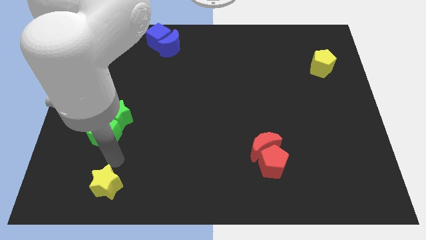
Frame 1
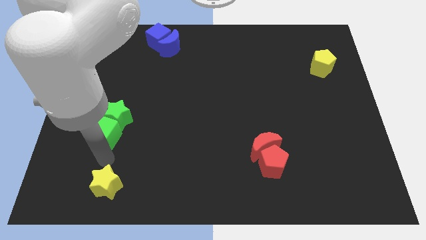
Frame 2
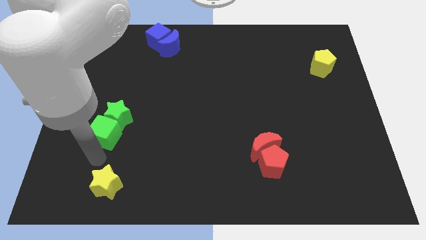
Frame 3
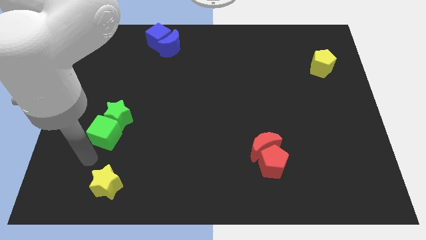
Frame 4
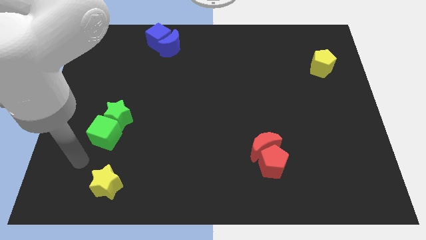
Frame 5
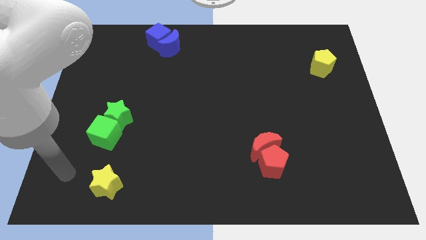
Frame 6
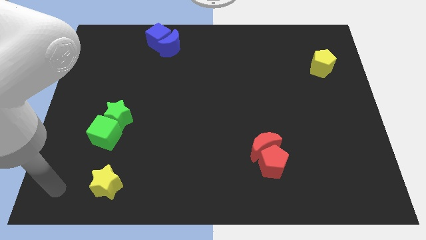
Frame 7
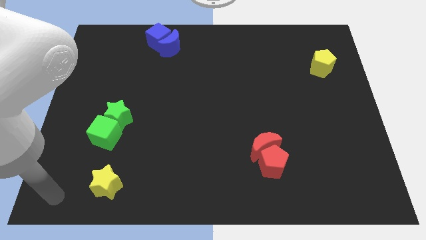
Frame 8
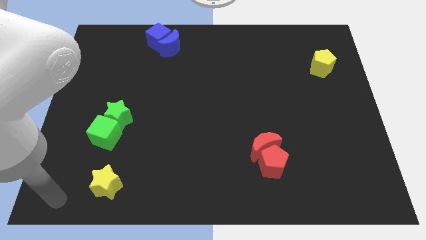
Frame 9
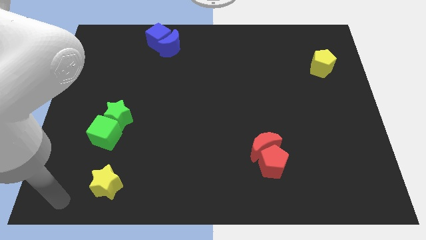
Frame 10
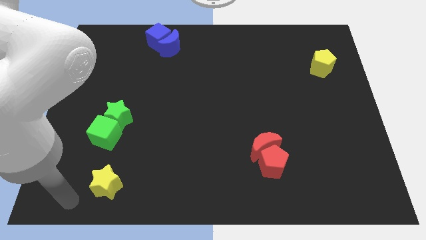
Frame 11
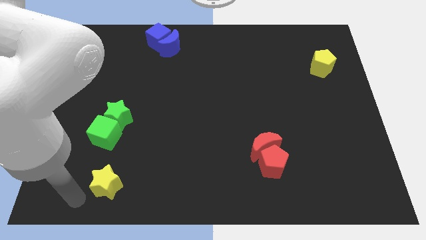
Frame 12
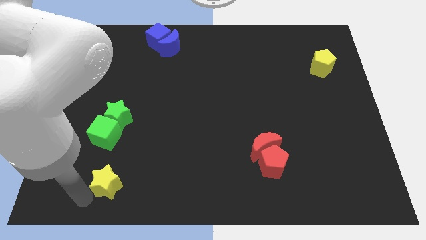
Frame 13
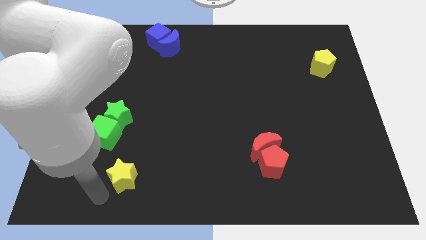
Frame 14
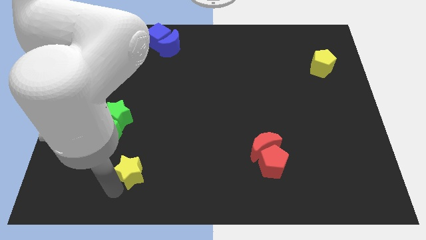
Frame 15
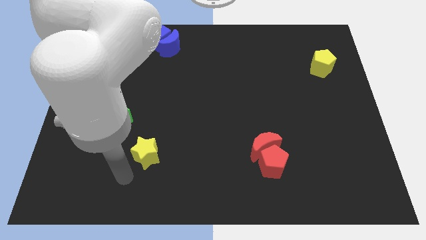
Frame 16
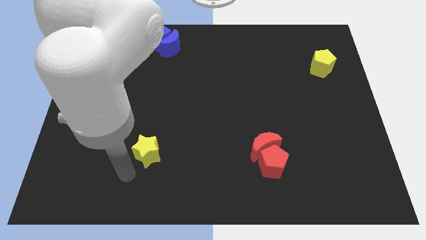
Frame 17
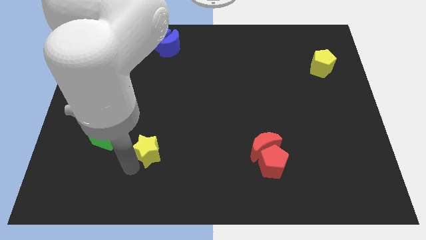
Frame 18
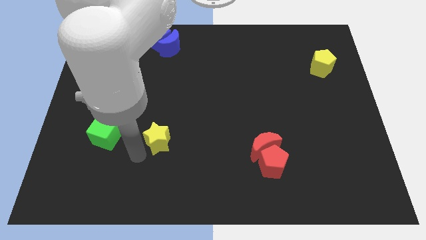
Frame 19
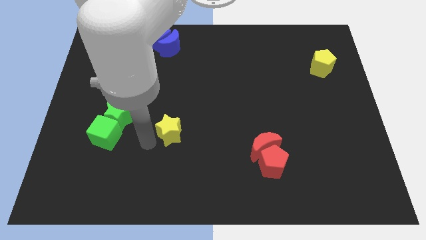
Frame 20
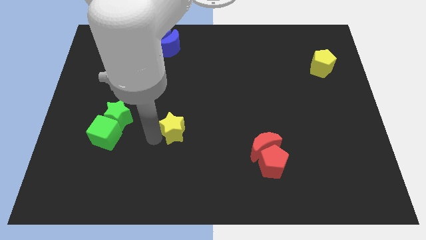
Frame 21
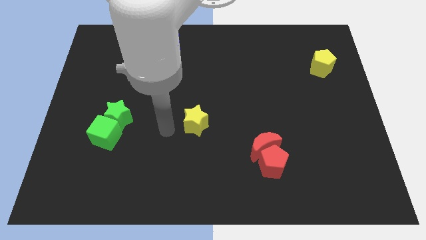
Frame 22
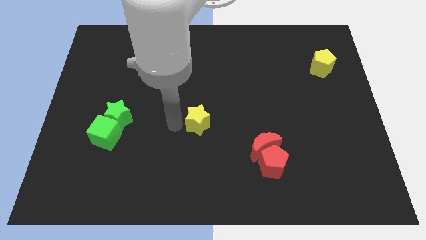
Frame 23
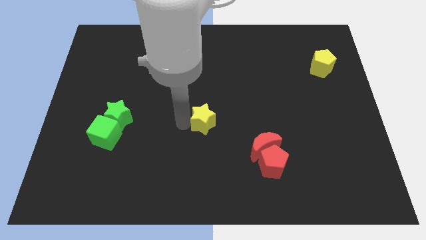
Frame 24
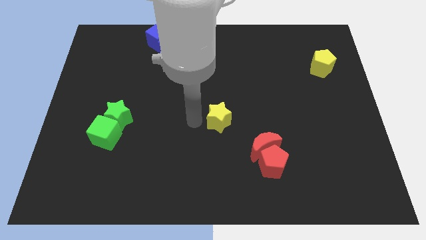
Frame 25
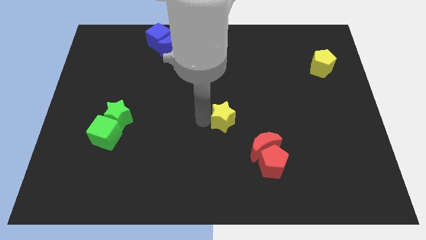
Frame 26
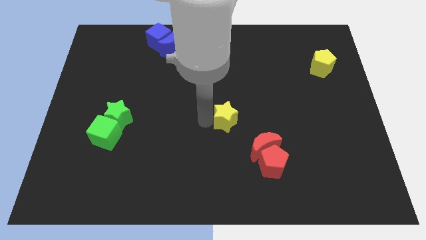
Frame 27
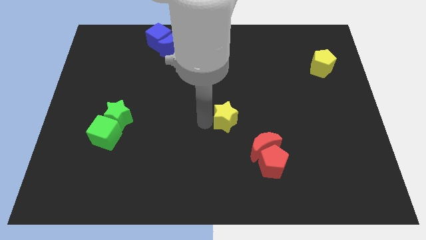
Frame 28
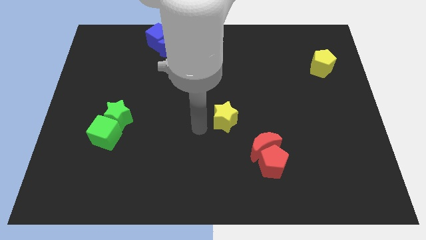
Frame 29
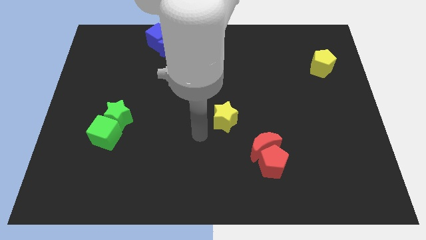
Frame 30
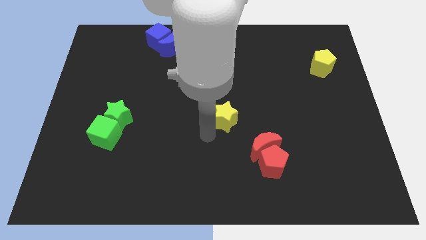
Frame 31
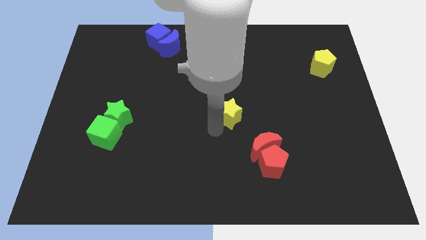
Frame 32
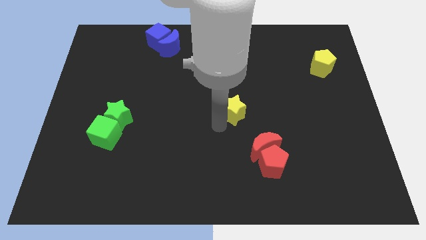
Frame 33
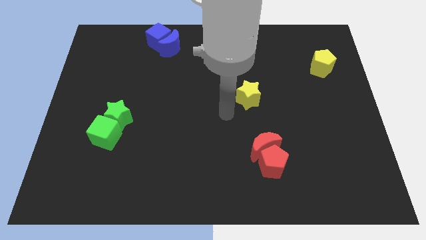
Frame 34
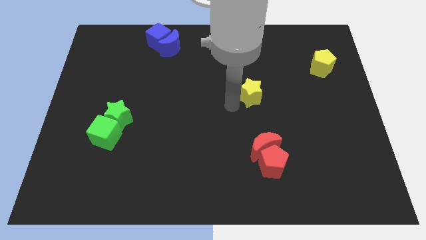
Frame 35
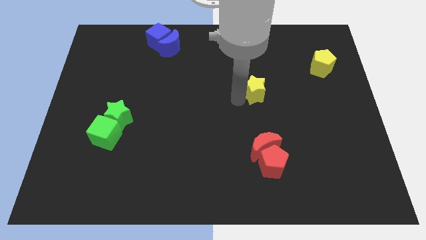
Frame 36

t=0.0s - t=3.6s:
put the yellow star vertically above the red blocks

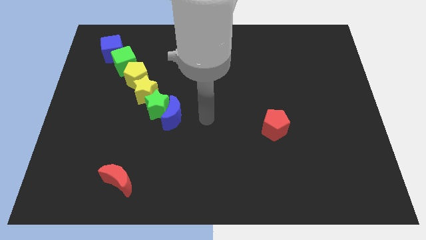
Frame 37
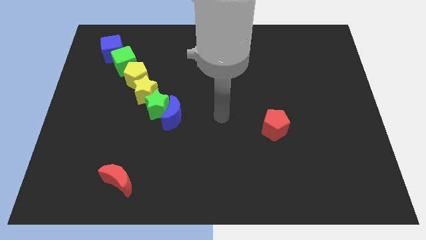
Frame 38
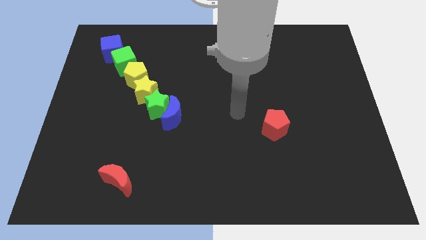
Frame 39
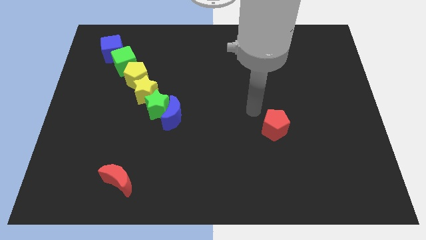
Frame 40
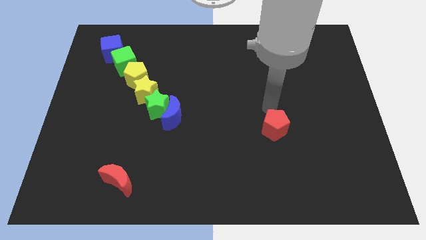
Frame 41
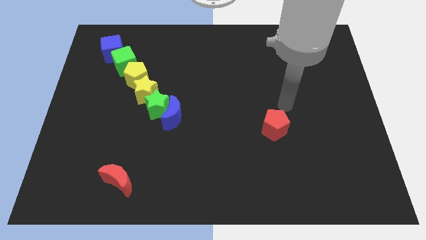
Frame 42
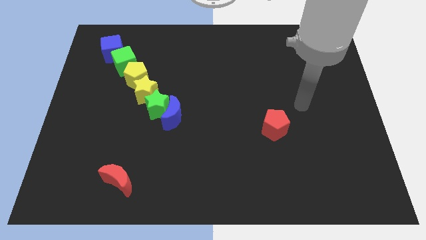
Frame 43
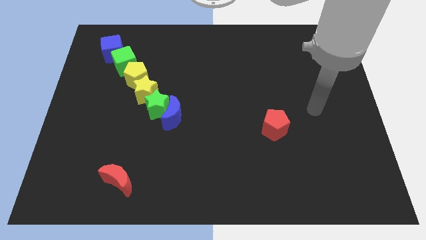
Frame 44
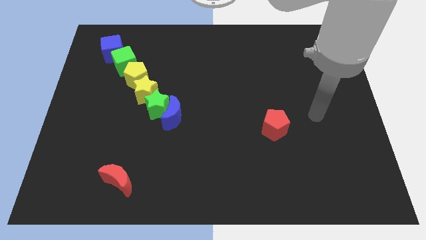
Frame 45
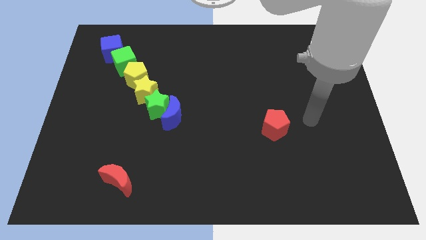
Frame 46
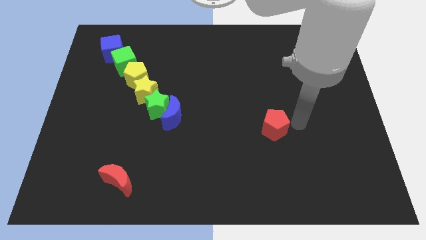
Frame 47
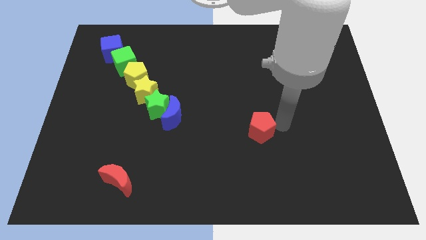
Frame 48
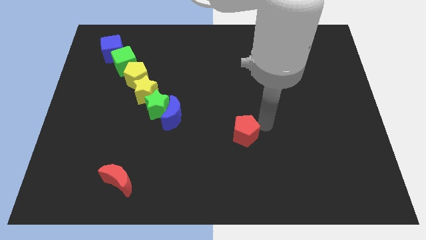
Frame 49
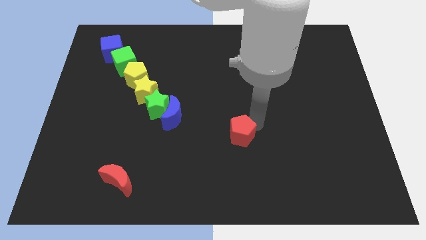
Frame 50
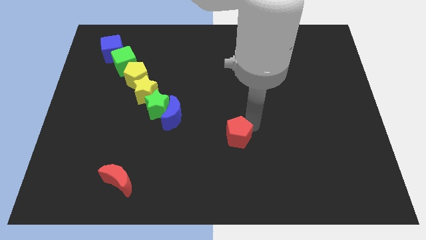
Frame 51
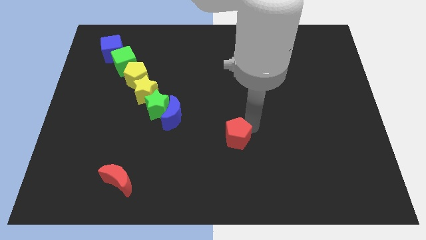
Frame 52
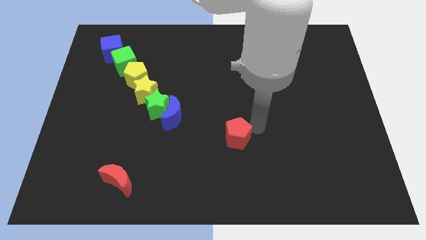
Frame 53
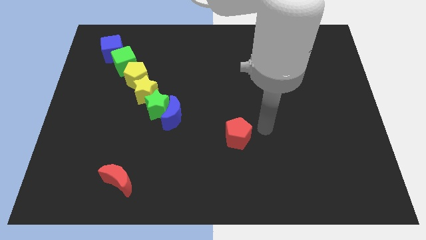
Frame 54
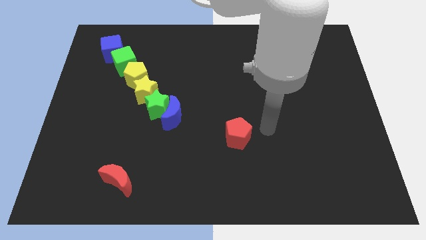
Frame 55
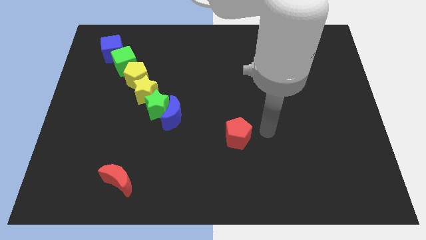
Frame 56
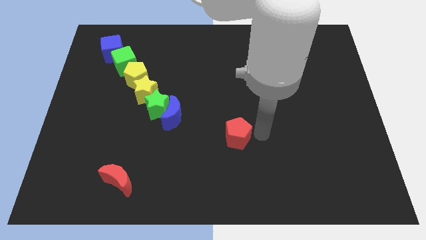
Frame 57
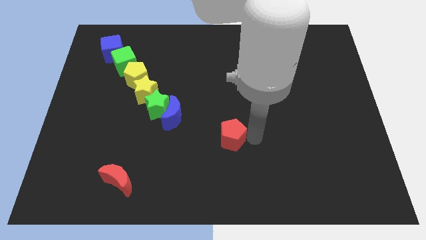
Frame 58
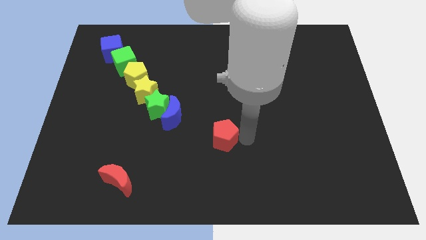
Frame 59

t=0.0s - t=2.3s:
push the red pentagon down and left a bit

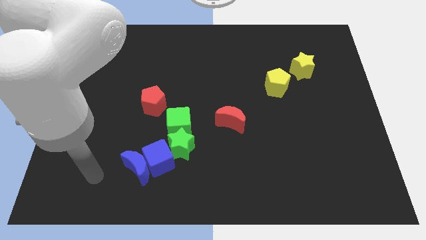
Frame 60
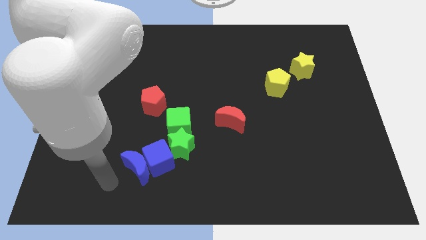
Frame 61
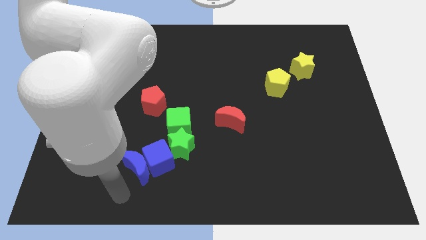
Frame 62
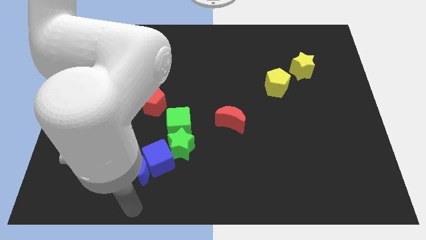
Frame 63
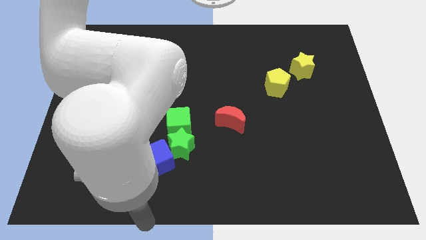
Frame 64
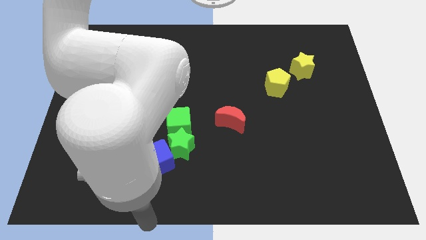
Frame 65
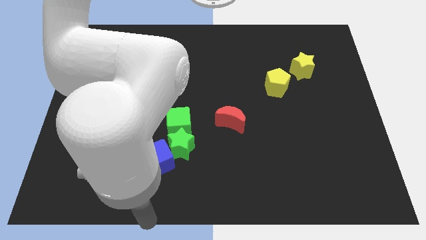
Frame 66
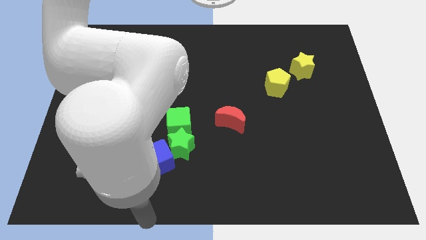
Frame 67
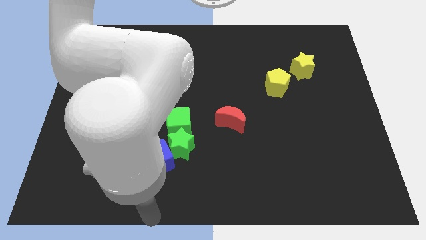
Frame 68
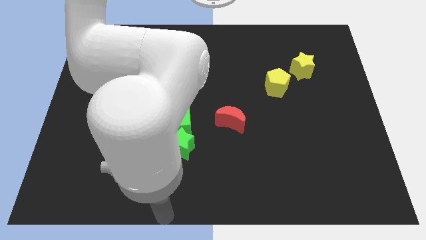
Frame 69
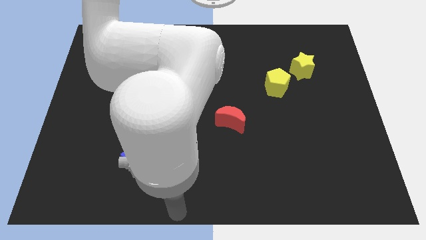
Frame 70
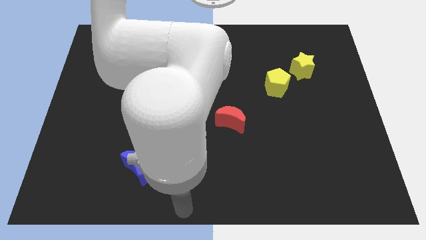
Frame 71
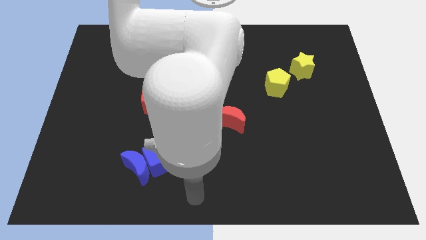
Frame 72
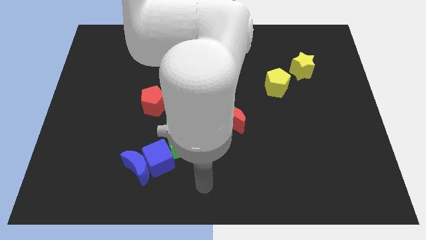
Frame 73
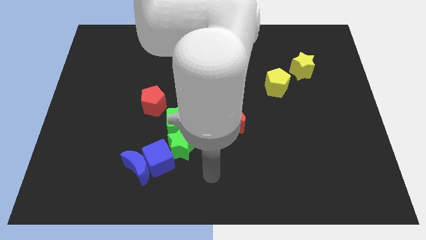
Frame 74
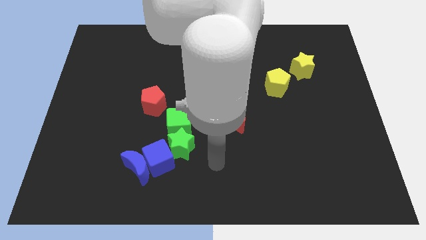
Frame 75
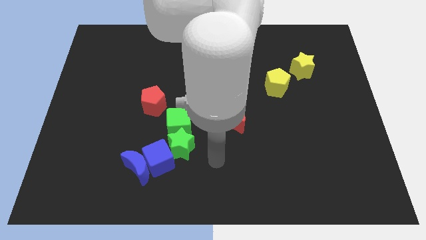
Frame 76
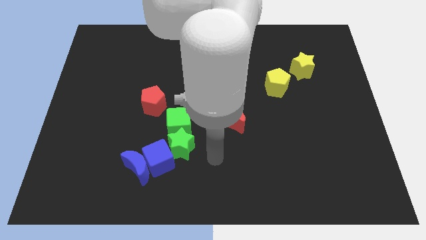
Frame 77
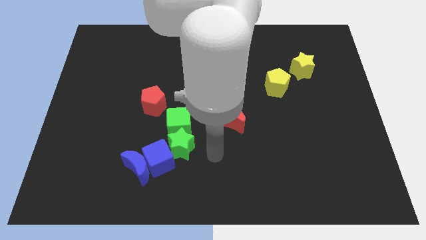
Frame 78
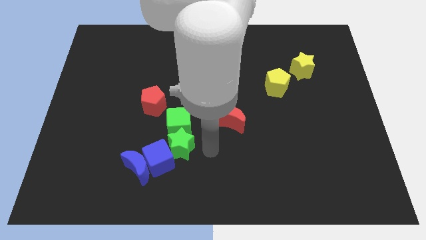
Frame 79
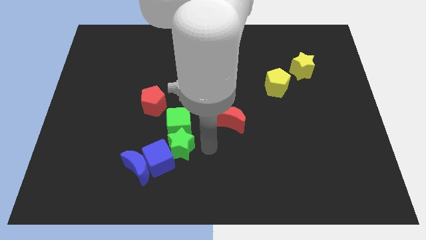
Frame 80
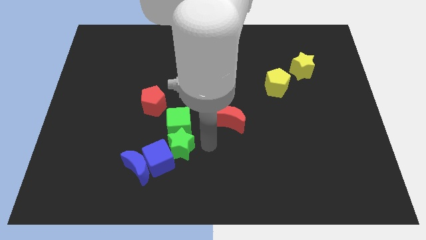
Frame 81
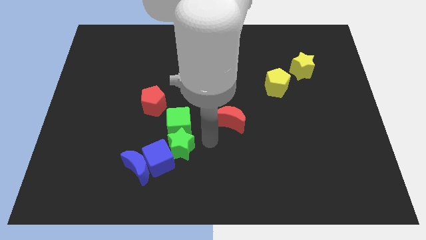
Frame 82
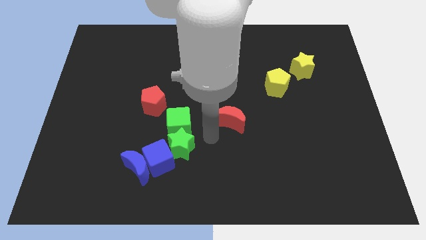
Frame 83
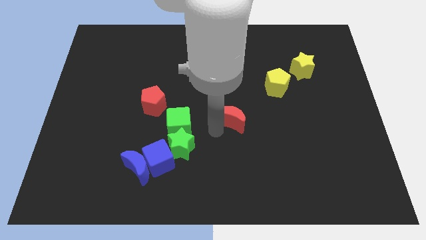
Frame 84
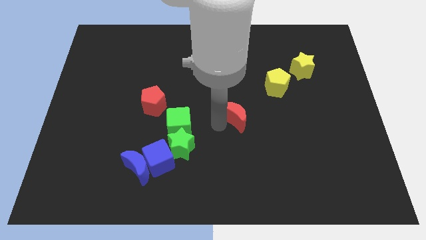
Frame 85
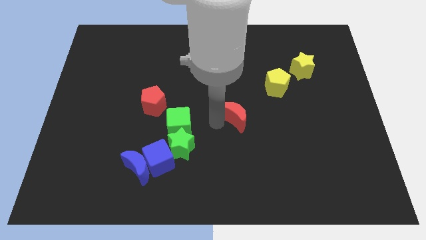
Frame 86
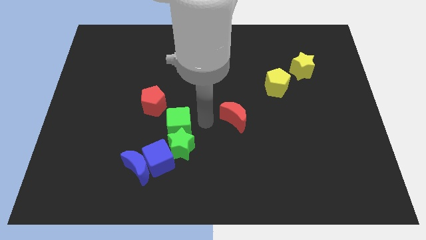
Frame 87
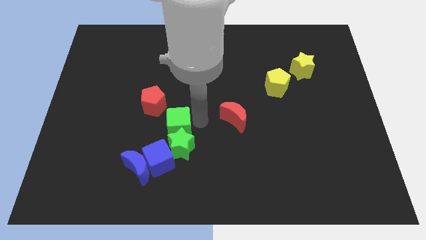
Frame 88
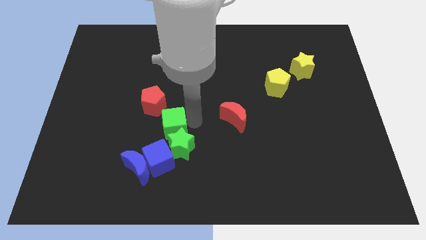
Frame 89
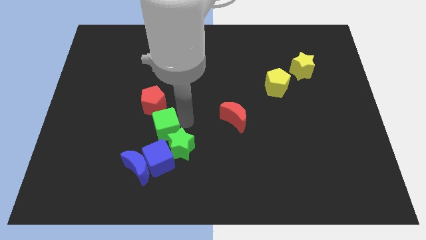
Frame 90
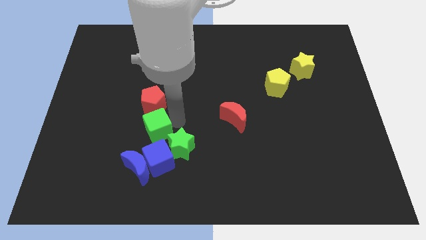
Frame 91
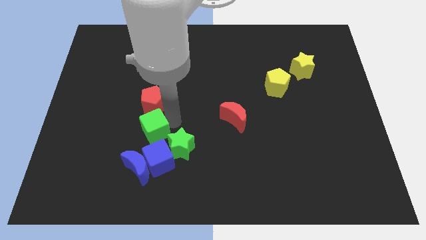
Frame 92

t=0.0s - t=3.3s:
slide the green cube vertically at the bottom of the red pentagon
